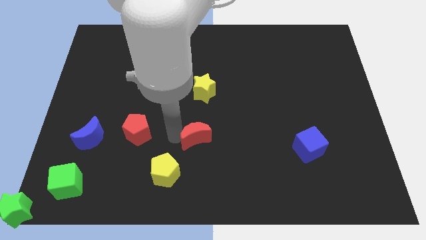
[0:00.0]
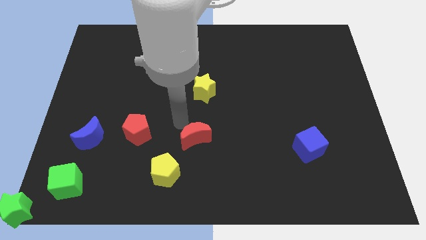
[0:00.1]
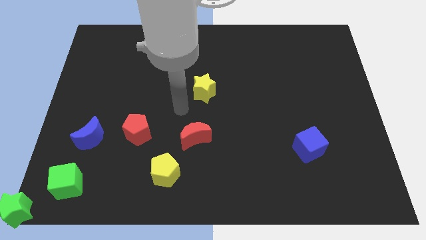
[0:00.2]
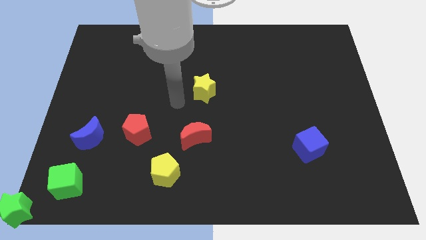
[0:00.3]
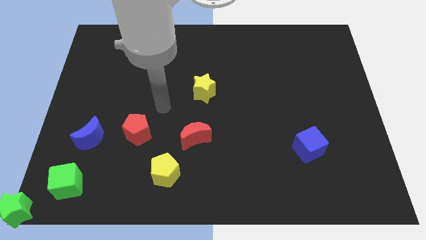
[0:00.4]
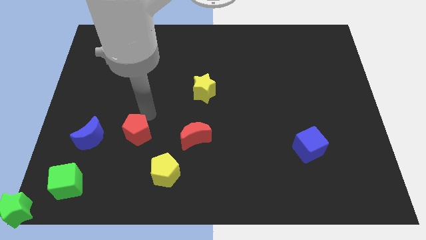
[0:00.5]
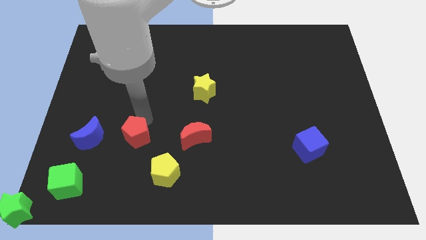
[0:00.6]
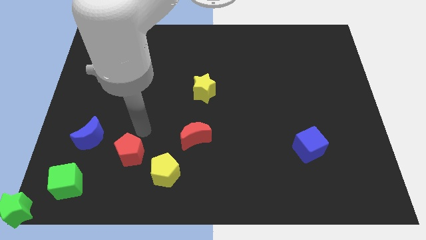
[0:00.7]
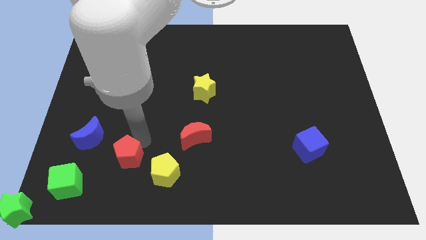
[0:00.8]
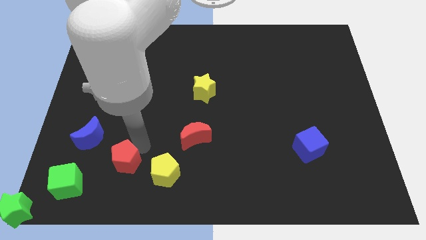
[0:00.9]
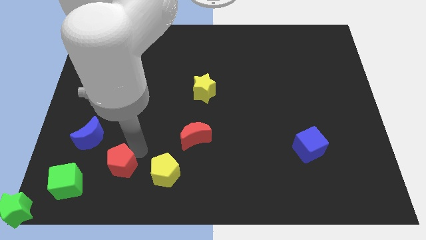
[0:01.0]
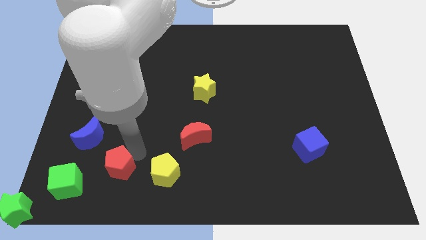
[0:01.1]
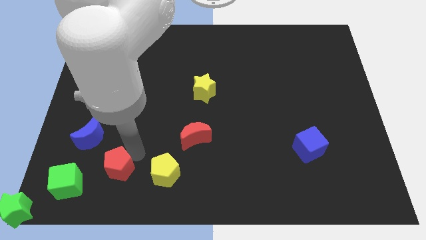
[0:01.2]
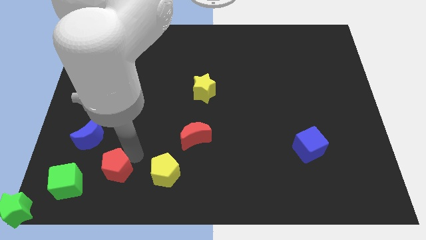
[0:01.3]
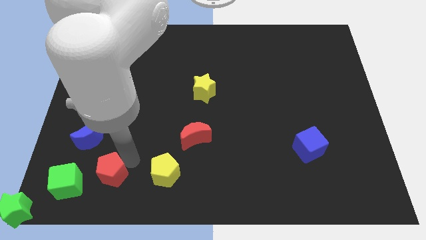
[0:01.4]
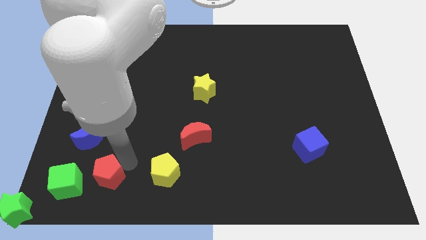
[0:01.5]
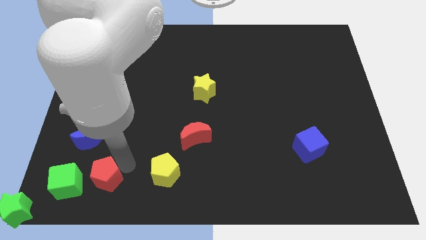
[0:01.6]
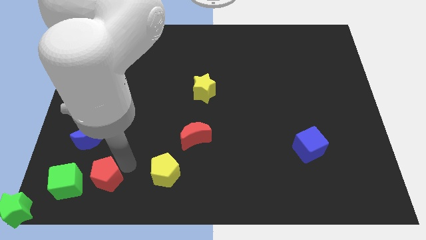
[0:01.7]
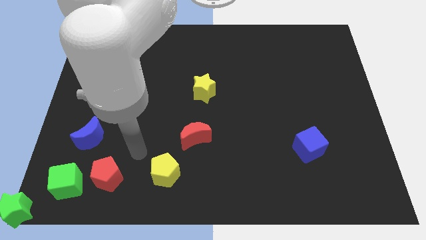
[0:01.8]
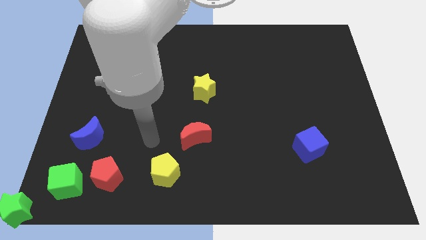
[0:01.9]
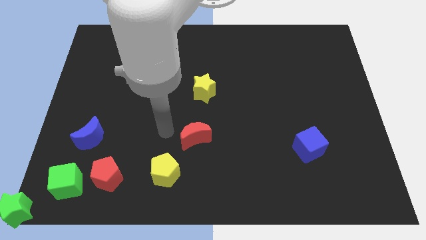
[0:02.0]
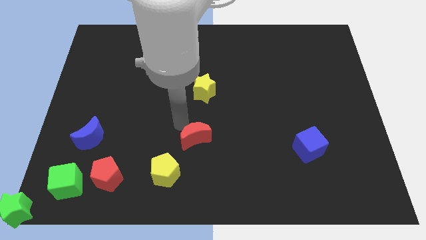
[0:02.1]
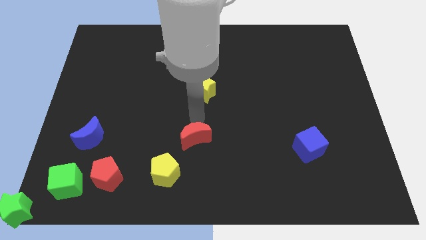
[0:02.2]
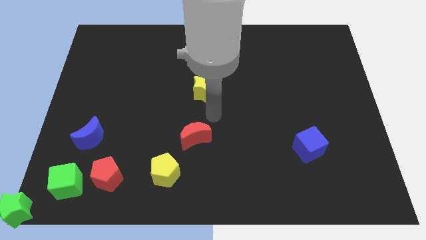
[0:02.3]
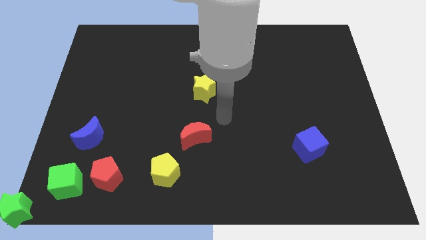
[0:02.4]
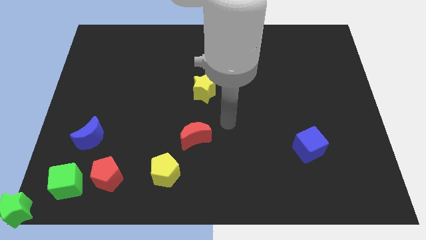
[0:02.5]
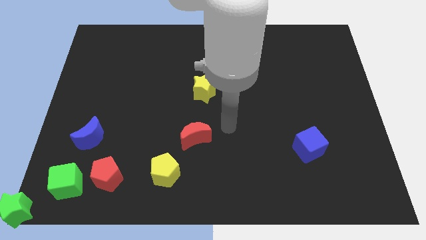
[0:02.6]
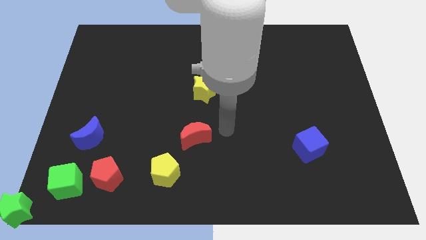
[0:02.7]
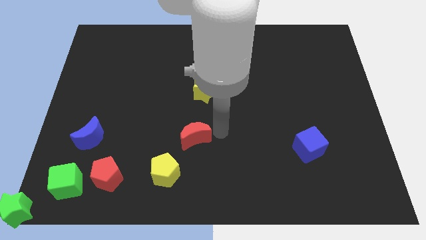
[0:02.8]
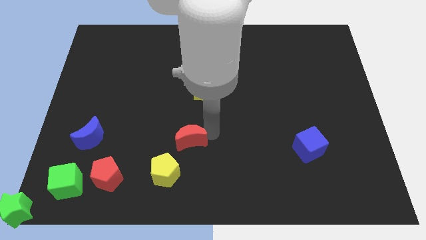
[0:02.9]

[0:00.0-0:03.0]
place the red pentagon between the green cube and yellow pentagon

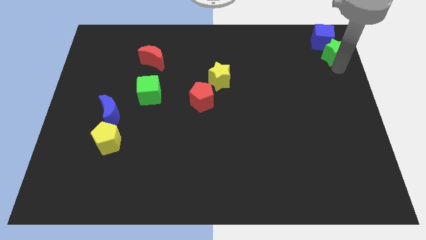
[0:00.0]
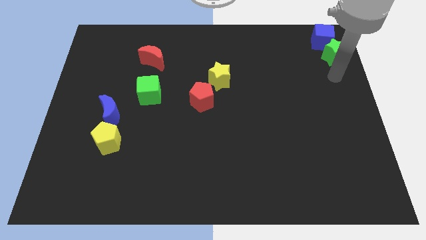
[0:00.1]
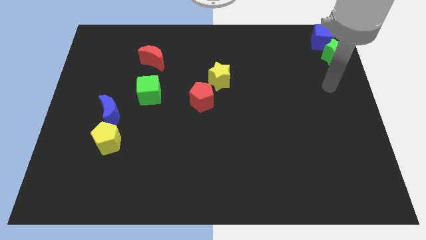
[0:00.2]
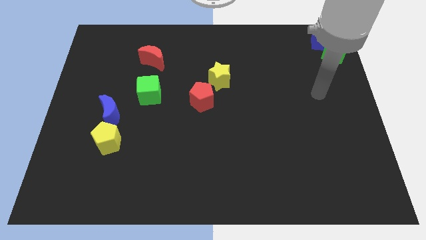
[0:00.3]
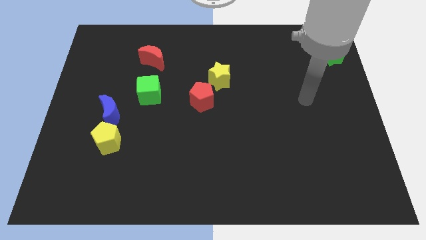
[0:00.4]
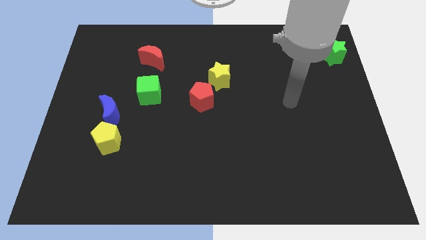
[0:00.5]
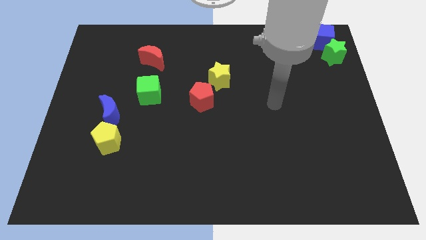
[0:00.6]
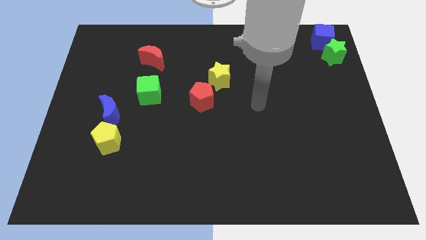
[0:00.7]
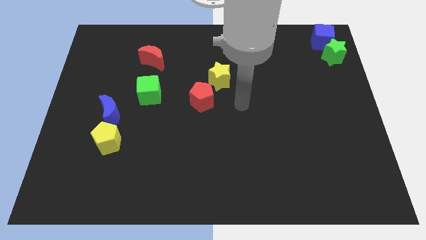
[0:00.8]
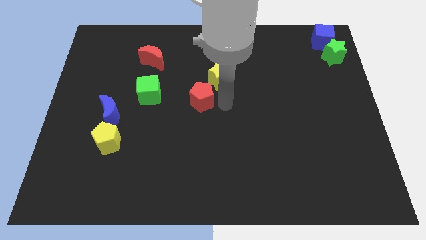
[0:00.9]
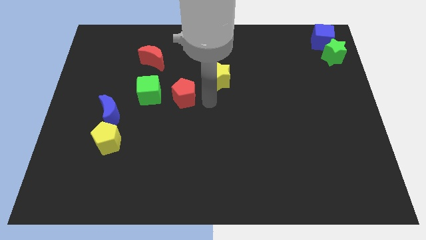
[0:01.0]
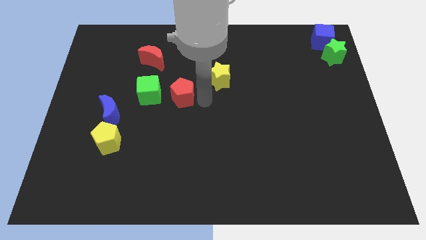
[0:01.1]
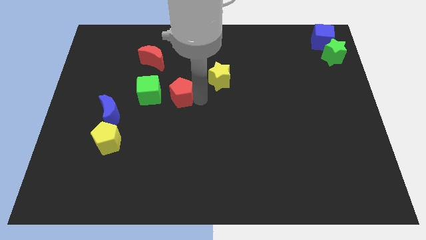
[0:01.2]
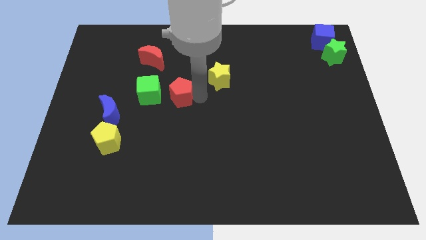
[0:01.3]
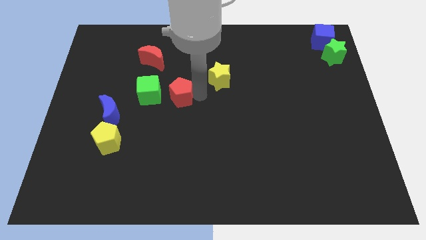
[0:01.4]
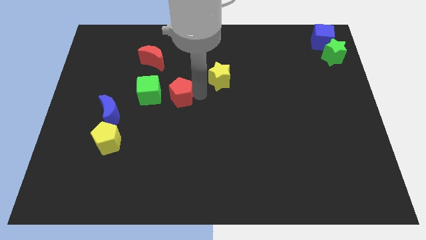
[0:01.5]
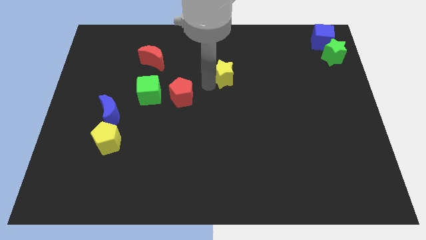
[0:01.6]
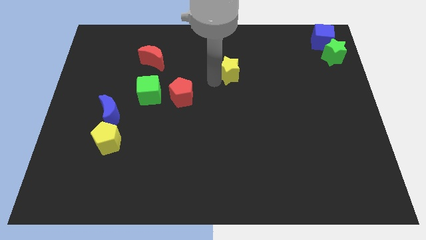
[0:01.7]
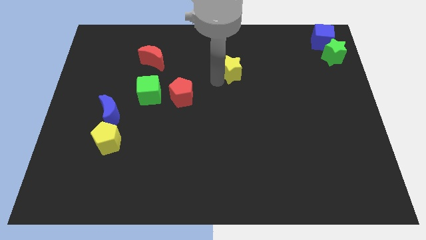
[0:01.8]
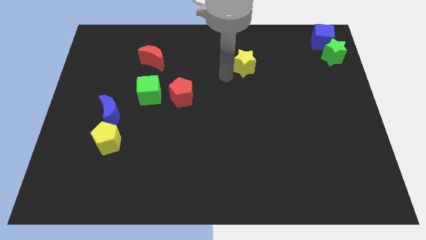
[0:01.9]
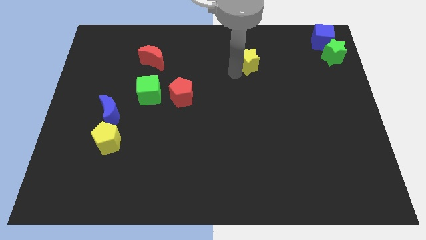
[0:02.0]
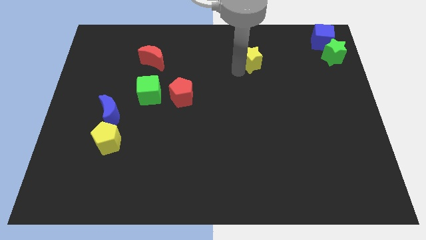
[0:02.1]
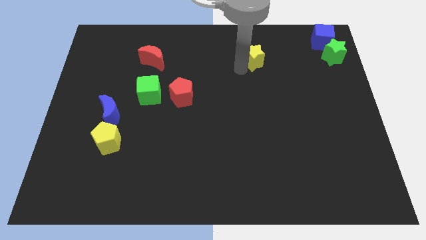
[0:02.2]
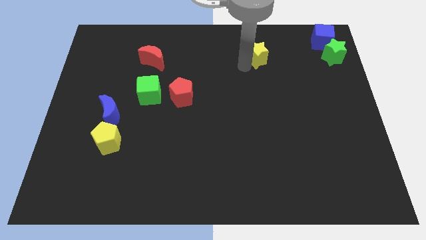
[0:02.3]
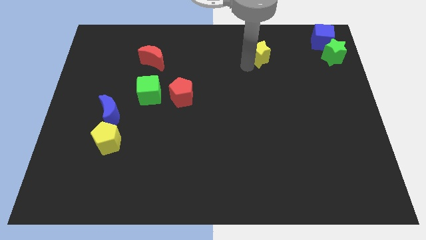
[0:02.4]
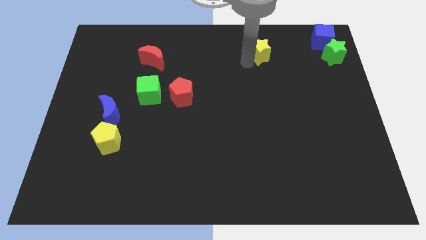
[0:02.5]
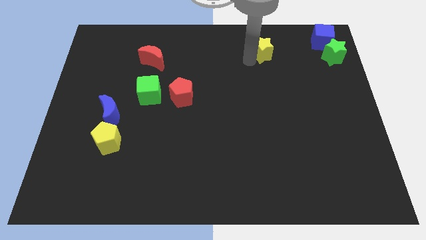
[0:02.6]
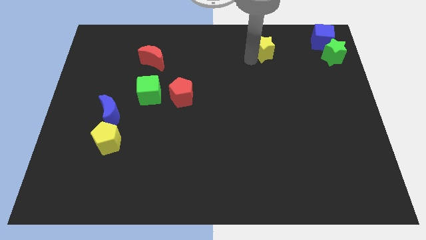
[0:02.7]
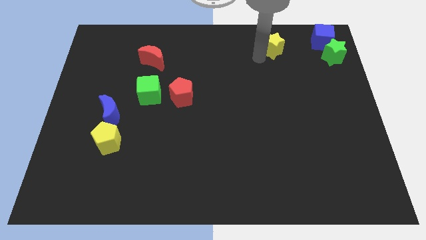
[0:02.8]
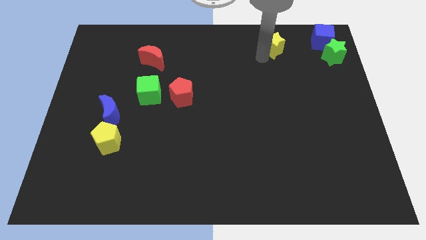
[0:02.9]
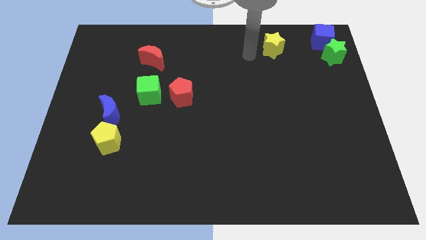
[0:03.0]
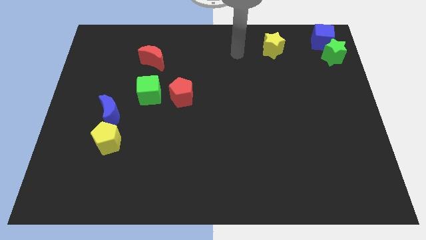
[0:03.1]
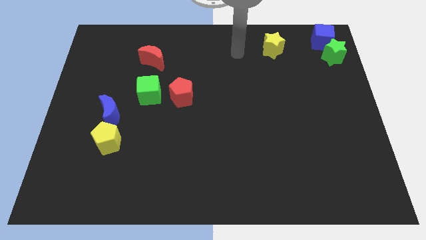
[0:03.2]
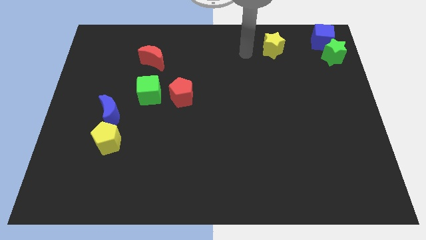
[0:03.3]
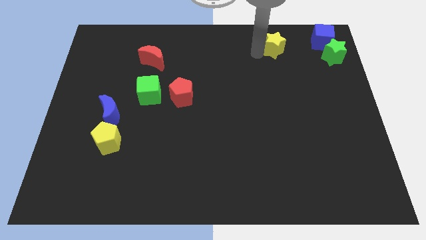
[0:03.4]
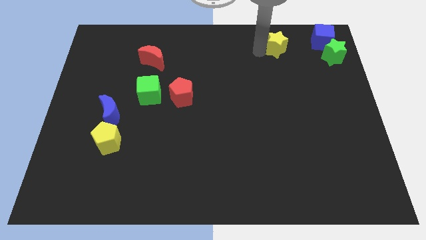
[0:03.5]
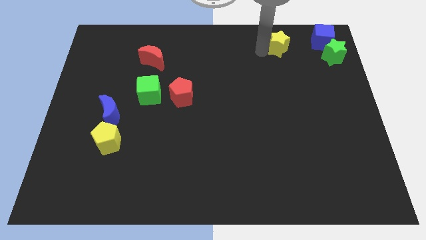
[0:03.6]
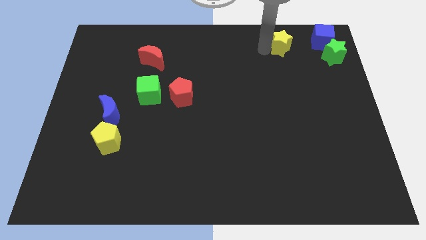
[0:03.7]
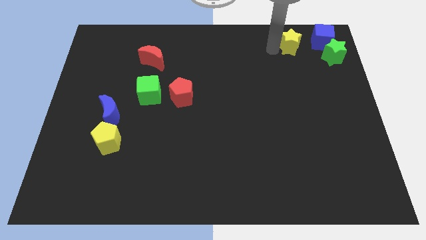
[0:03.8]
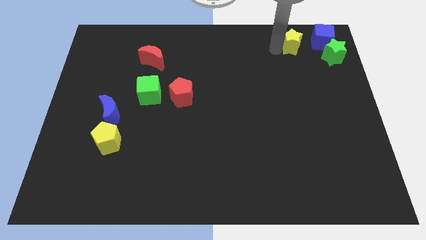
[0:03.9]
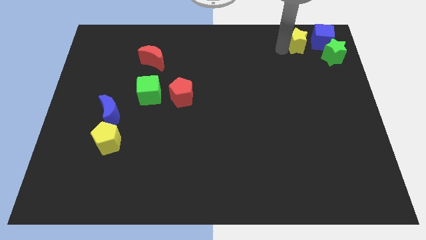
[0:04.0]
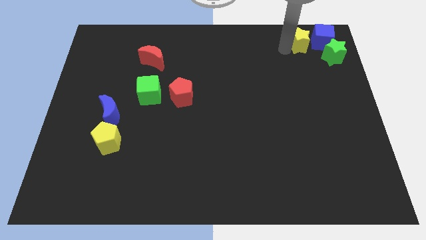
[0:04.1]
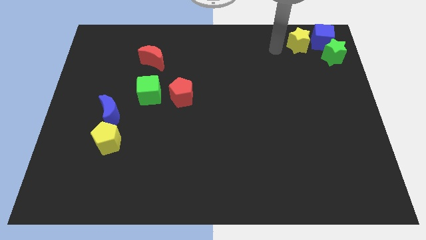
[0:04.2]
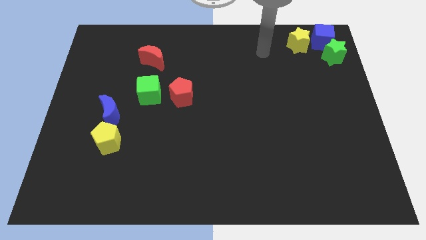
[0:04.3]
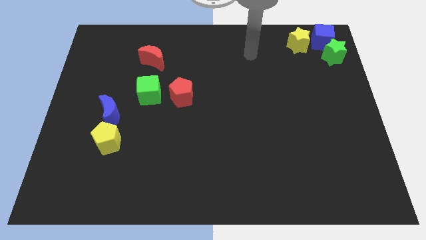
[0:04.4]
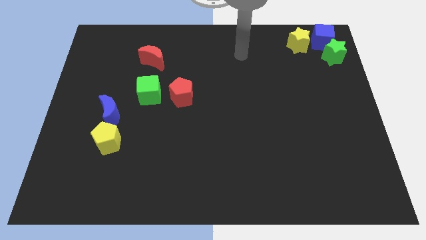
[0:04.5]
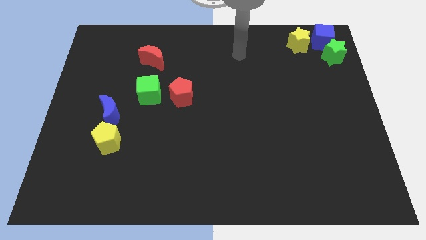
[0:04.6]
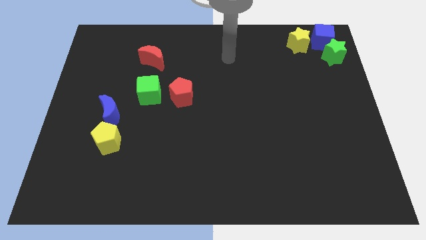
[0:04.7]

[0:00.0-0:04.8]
move the yellow block towards the top of the blue block

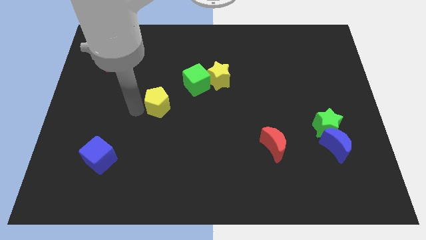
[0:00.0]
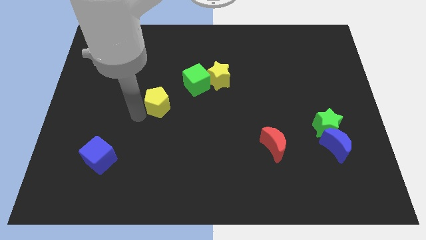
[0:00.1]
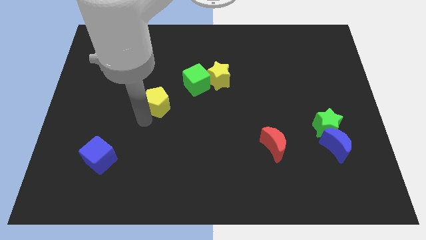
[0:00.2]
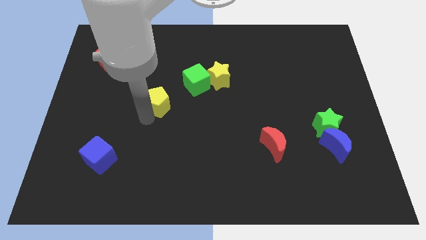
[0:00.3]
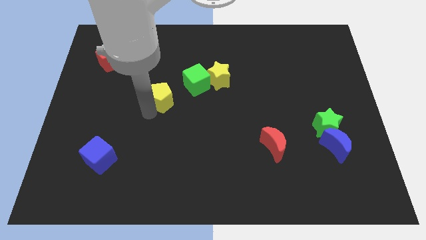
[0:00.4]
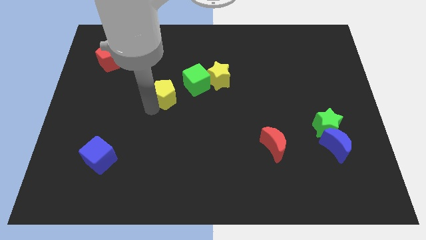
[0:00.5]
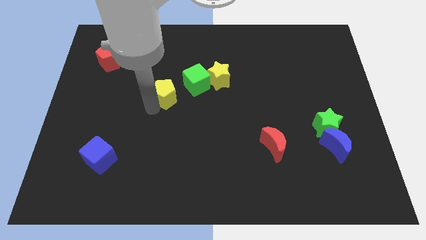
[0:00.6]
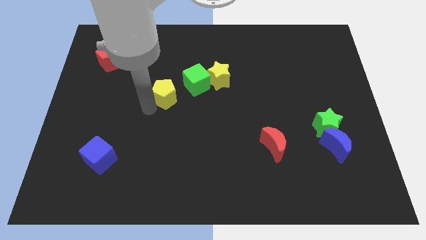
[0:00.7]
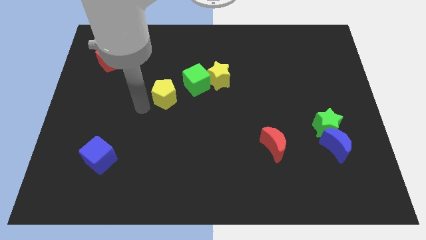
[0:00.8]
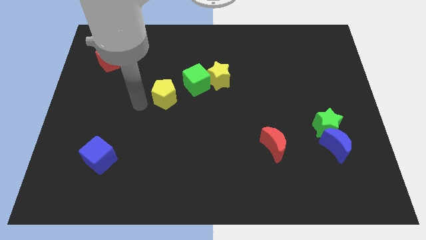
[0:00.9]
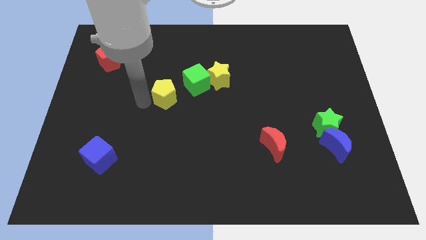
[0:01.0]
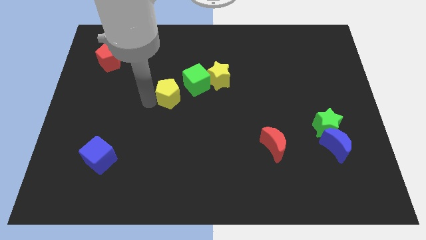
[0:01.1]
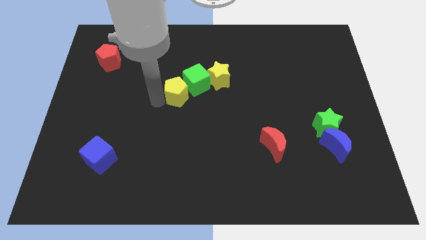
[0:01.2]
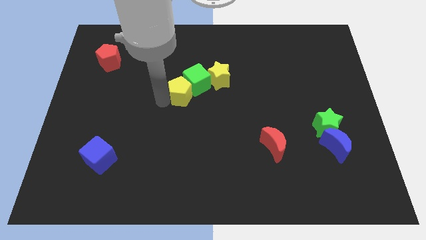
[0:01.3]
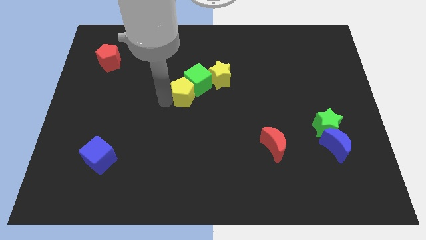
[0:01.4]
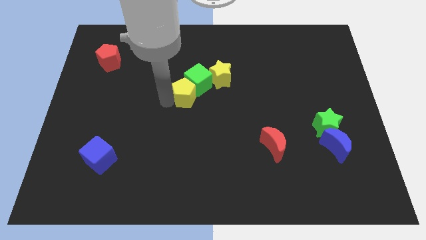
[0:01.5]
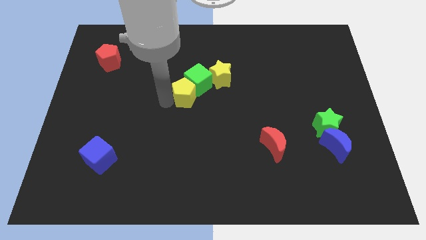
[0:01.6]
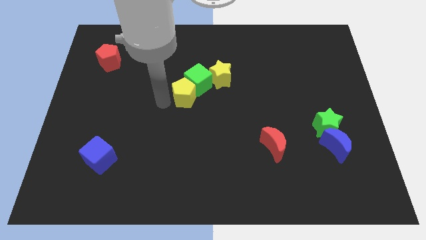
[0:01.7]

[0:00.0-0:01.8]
place the yellow pentagon into the green cube
